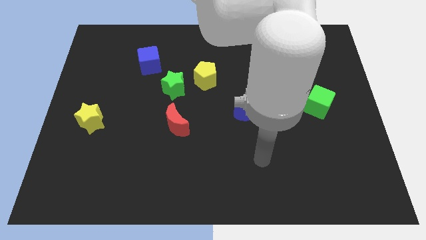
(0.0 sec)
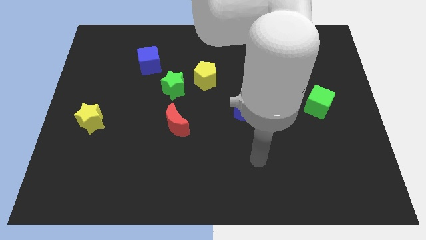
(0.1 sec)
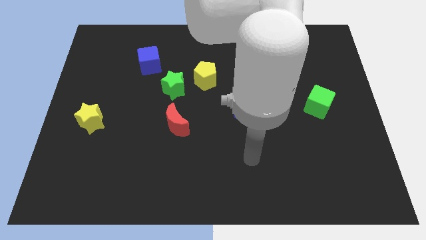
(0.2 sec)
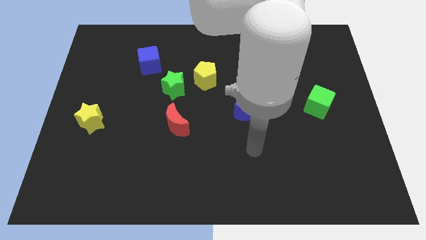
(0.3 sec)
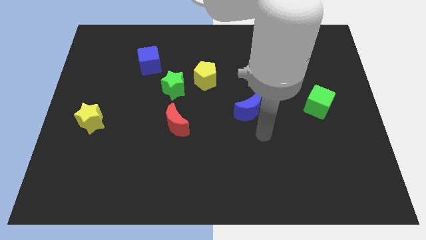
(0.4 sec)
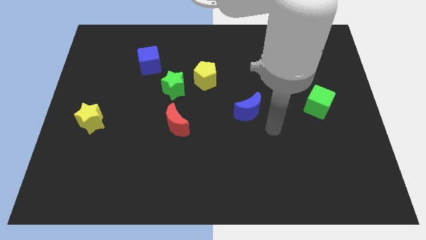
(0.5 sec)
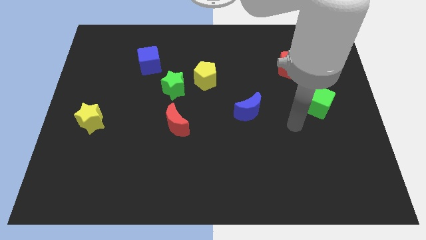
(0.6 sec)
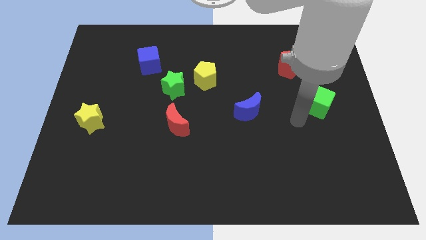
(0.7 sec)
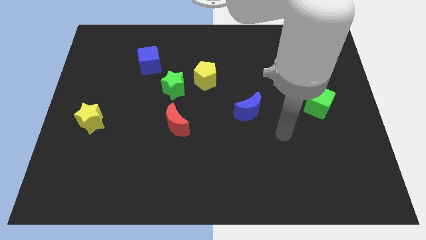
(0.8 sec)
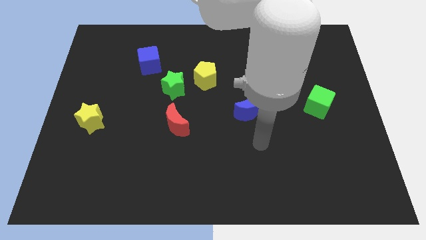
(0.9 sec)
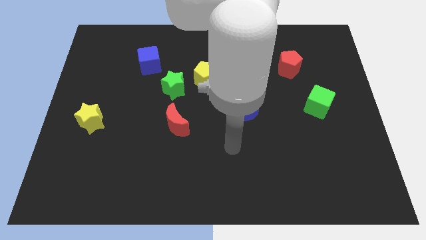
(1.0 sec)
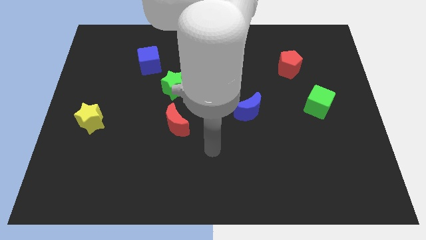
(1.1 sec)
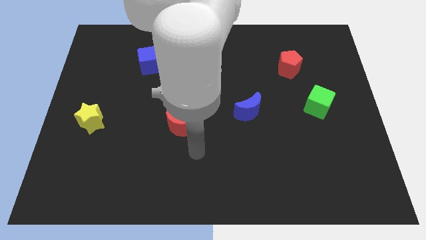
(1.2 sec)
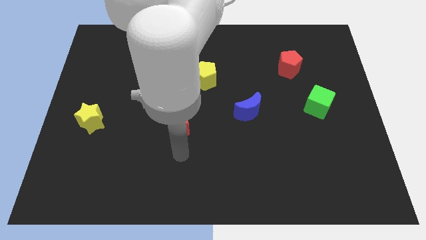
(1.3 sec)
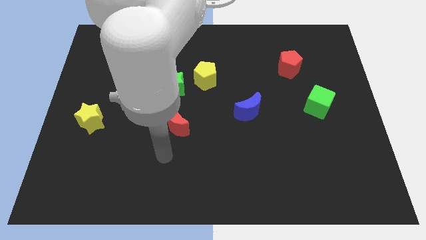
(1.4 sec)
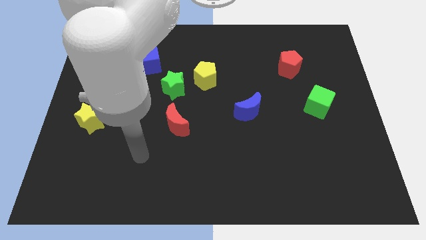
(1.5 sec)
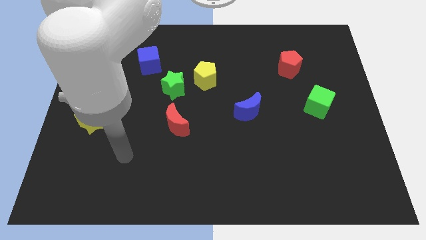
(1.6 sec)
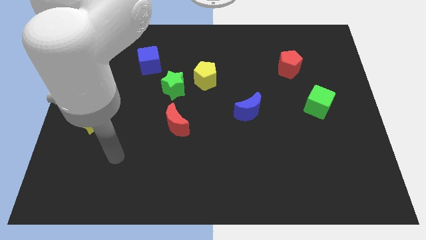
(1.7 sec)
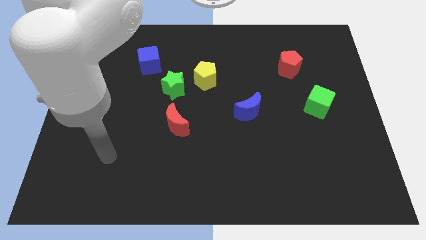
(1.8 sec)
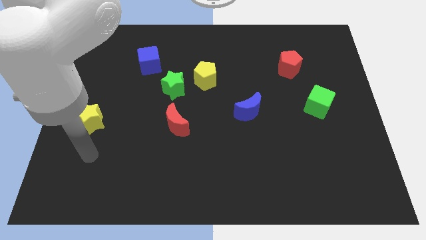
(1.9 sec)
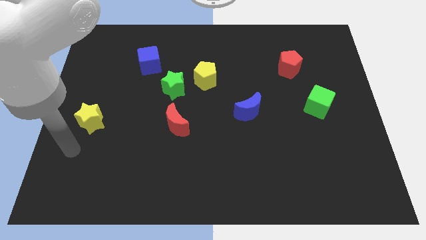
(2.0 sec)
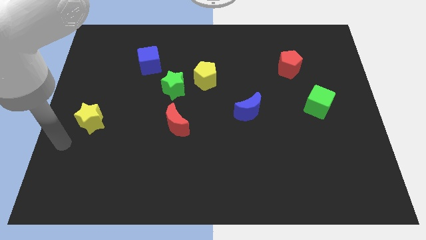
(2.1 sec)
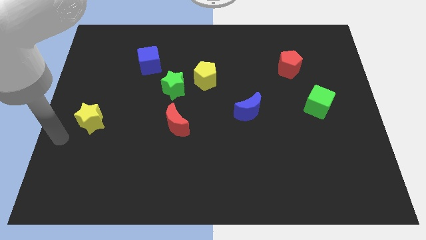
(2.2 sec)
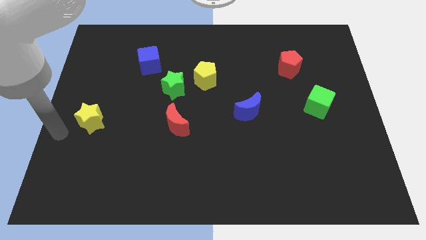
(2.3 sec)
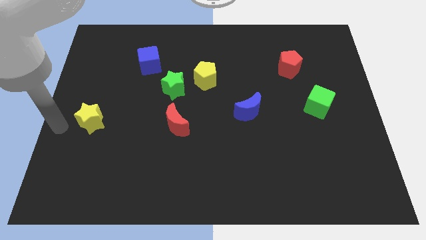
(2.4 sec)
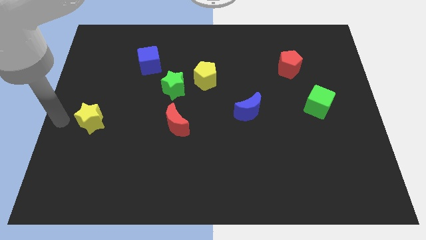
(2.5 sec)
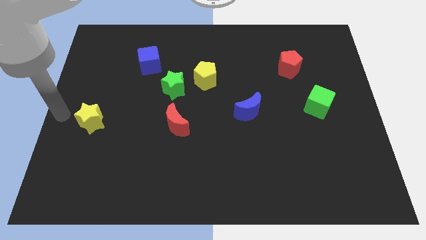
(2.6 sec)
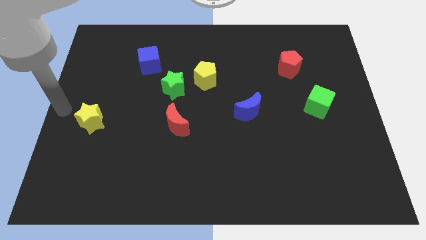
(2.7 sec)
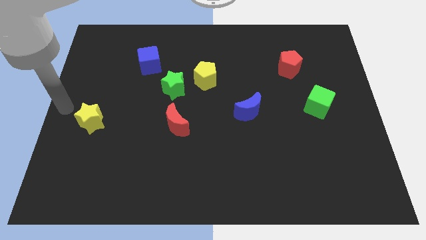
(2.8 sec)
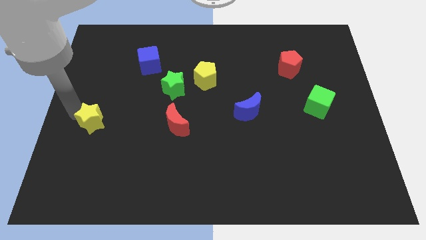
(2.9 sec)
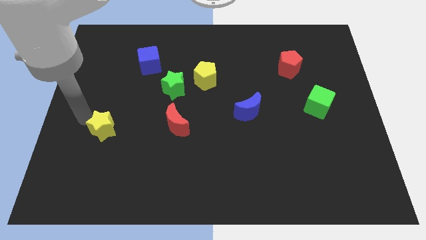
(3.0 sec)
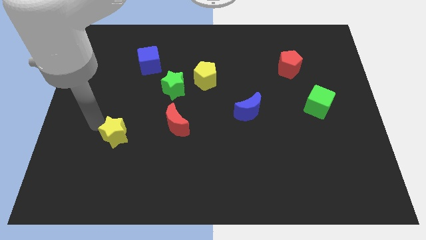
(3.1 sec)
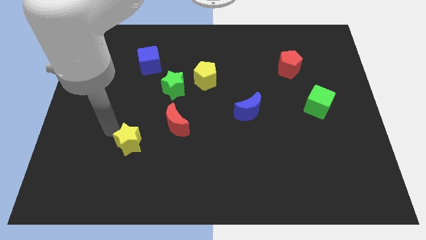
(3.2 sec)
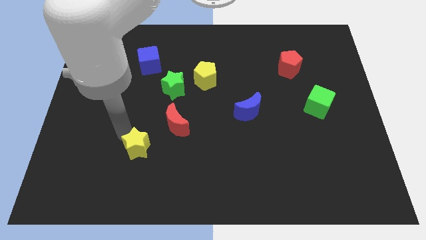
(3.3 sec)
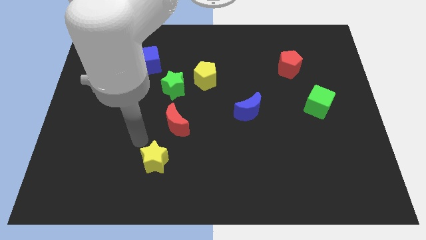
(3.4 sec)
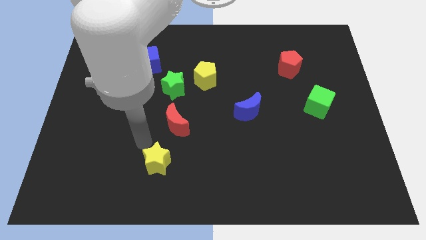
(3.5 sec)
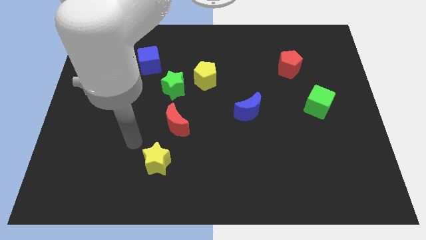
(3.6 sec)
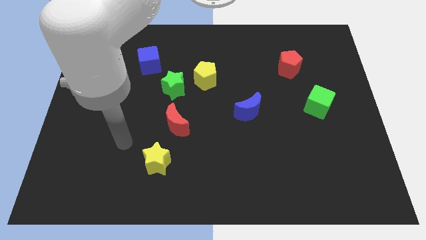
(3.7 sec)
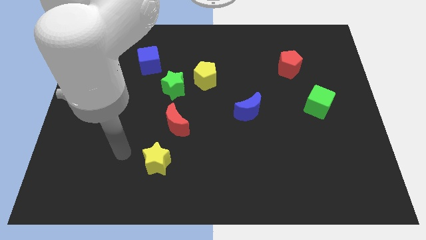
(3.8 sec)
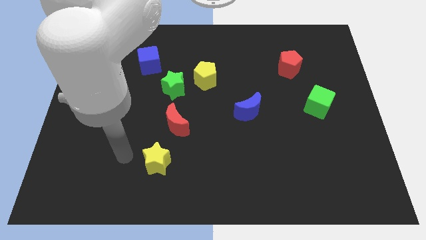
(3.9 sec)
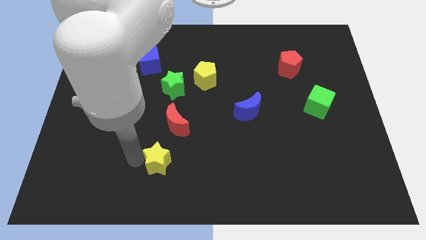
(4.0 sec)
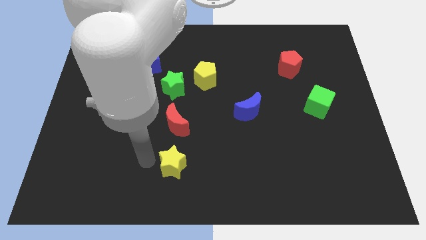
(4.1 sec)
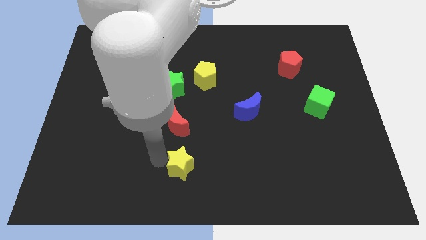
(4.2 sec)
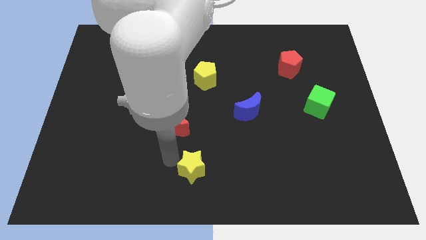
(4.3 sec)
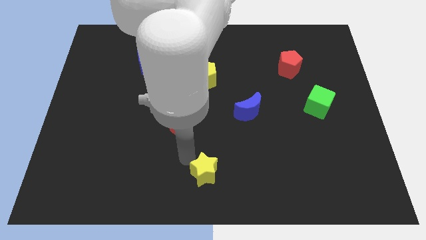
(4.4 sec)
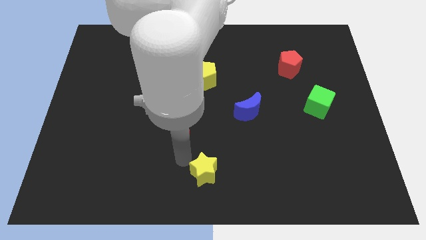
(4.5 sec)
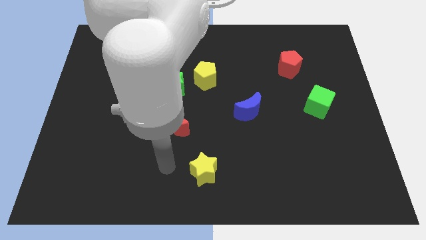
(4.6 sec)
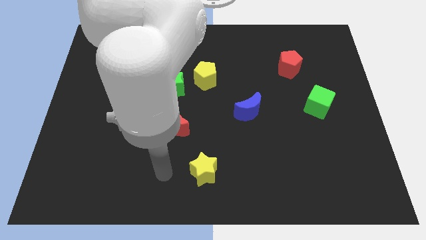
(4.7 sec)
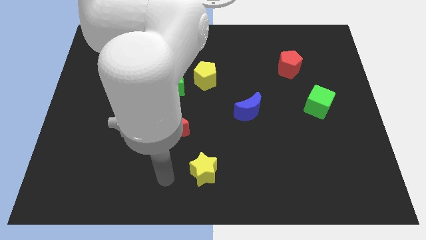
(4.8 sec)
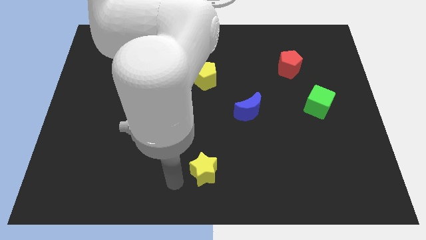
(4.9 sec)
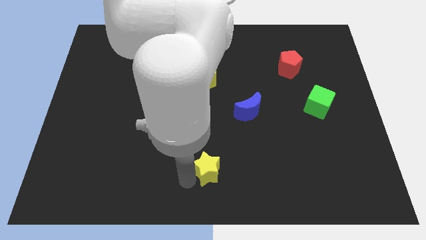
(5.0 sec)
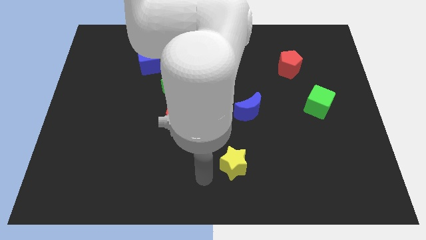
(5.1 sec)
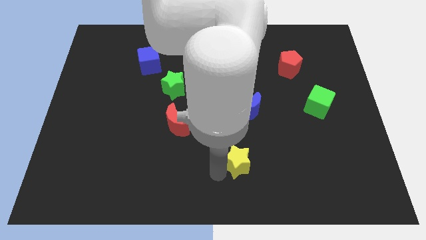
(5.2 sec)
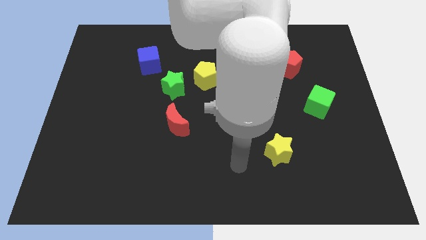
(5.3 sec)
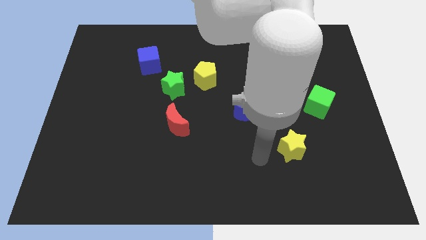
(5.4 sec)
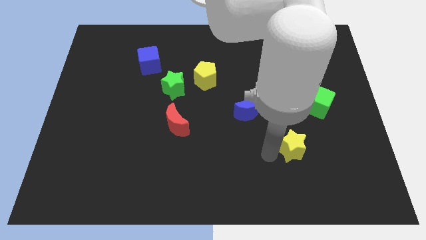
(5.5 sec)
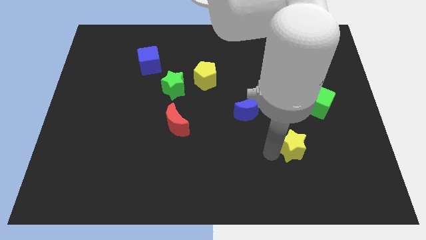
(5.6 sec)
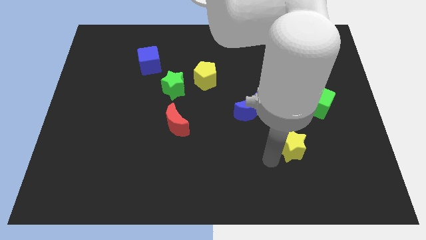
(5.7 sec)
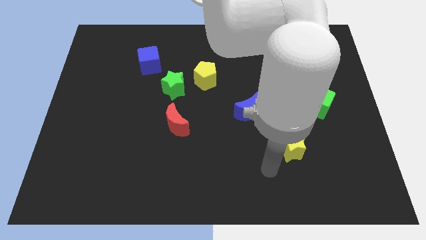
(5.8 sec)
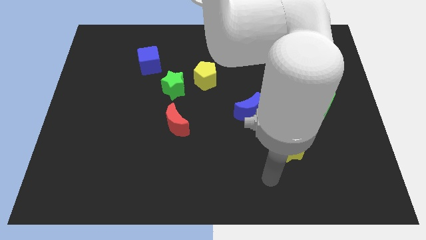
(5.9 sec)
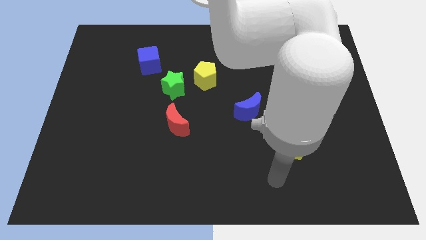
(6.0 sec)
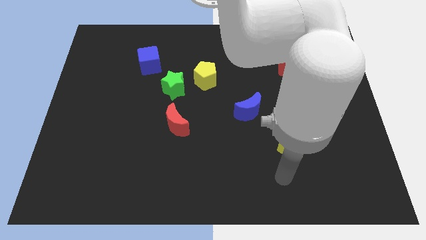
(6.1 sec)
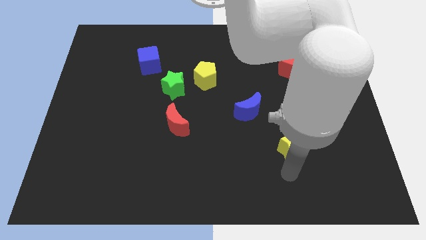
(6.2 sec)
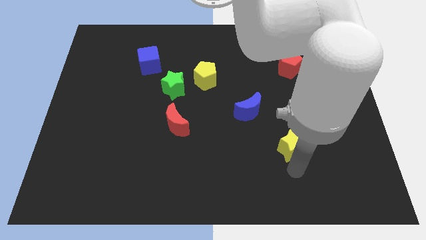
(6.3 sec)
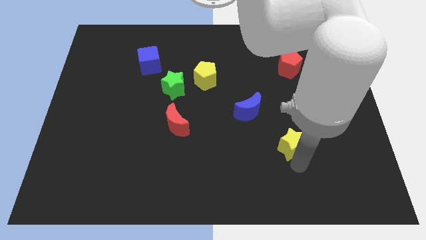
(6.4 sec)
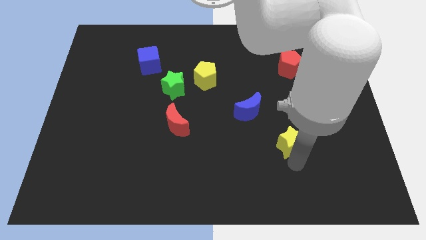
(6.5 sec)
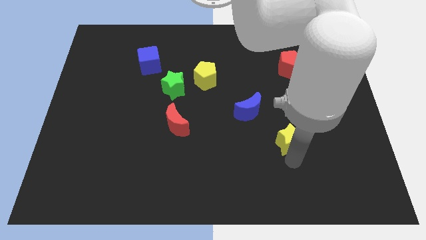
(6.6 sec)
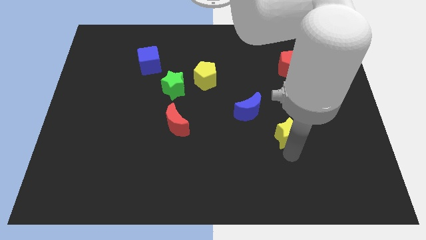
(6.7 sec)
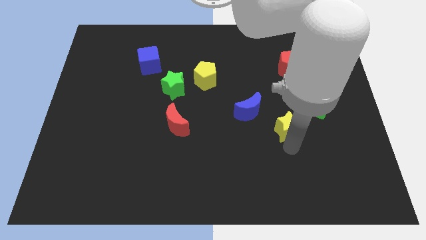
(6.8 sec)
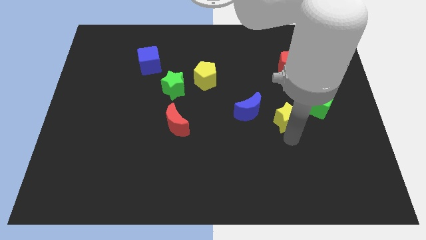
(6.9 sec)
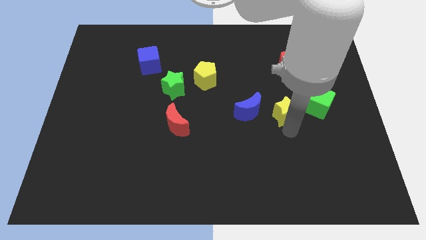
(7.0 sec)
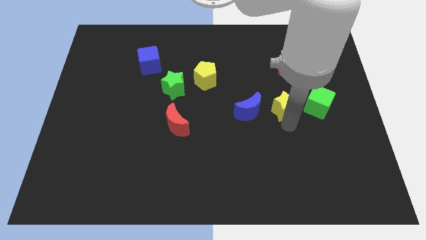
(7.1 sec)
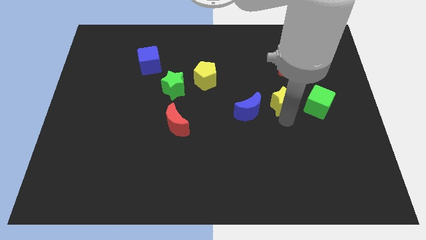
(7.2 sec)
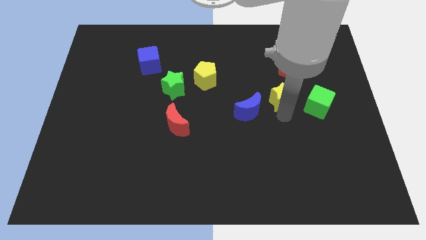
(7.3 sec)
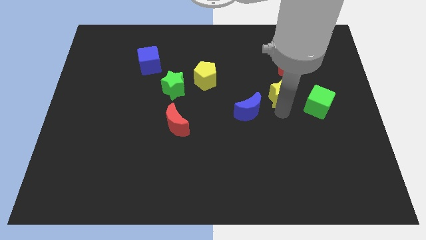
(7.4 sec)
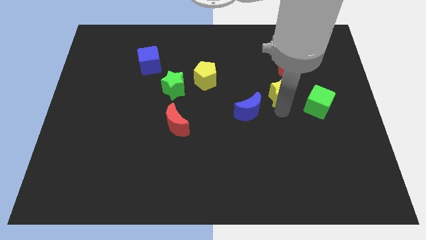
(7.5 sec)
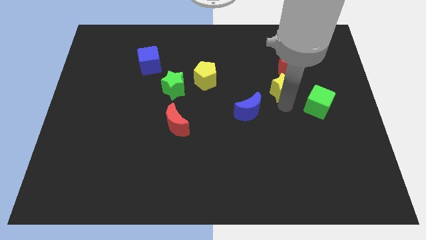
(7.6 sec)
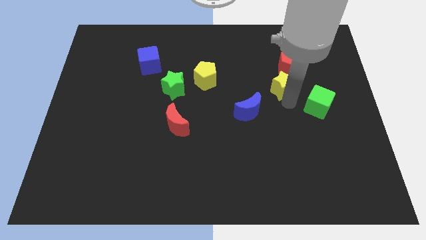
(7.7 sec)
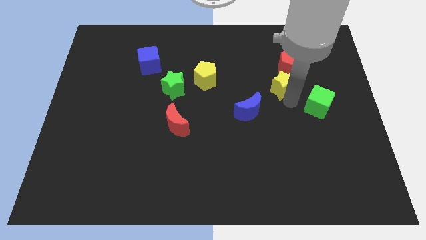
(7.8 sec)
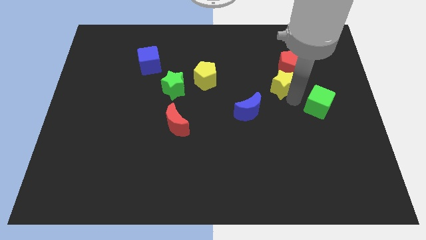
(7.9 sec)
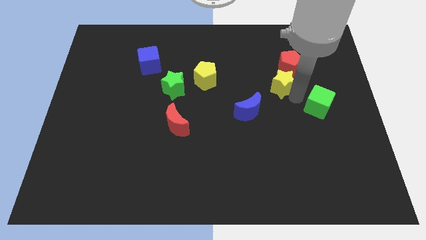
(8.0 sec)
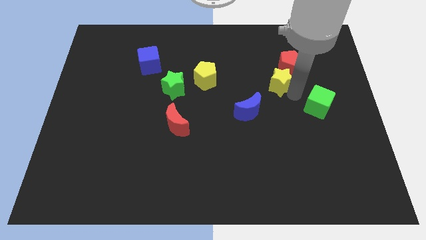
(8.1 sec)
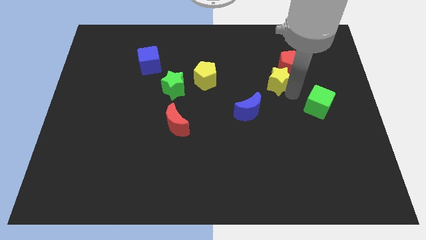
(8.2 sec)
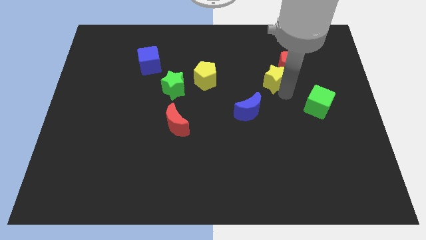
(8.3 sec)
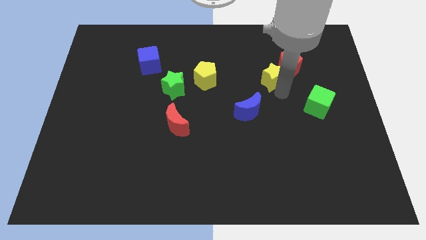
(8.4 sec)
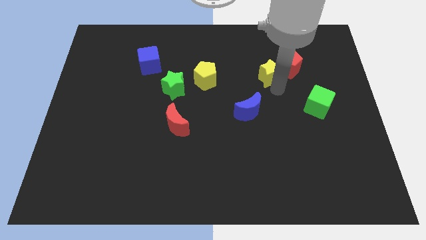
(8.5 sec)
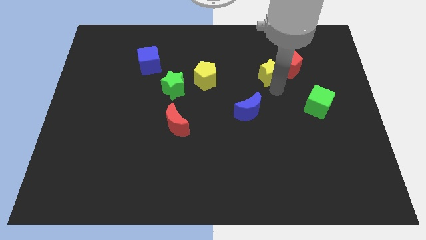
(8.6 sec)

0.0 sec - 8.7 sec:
push the yellow star next to the red pentagon
